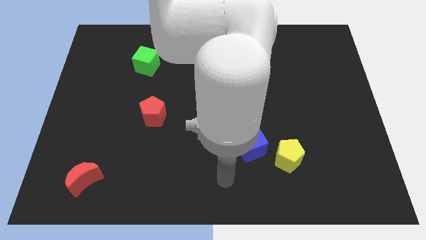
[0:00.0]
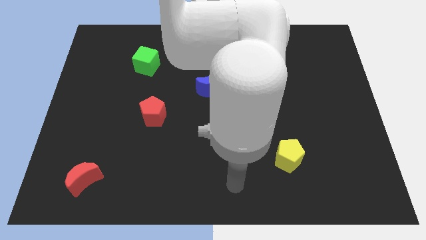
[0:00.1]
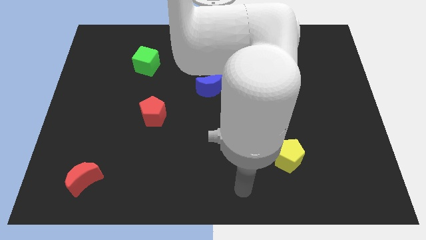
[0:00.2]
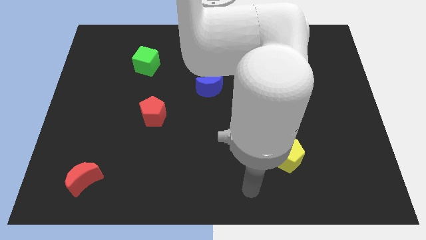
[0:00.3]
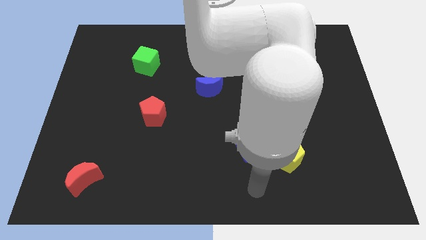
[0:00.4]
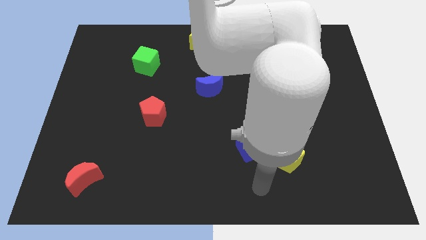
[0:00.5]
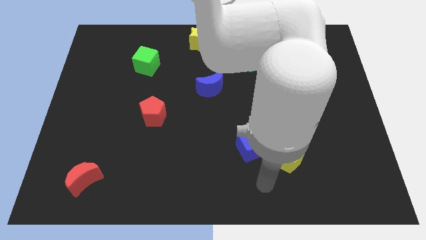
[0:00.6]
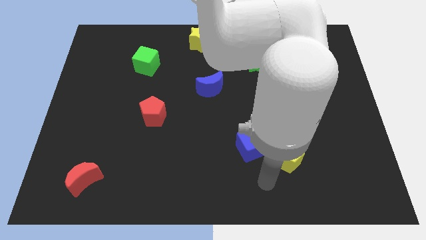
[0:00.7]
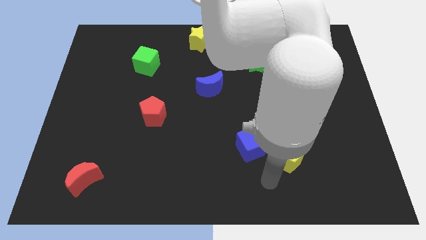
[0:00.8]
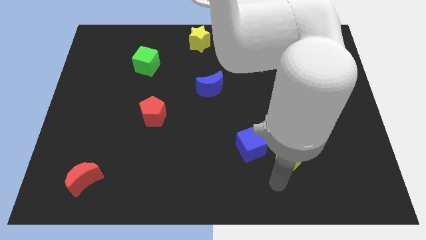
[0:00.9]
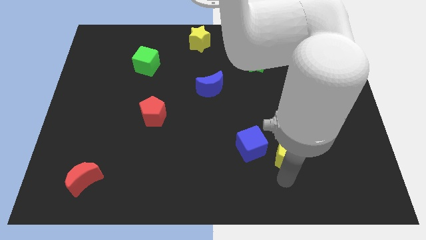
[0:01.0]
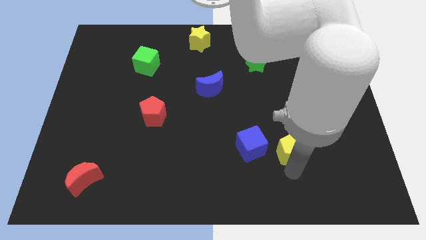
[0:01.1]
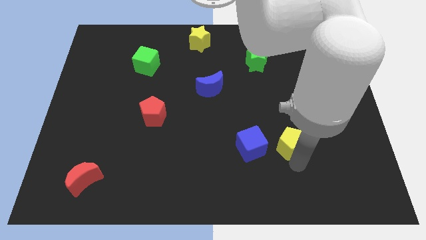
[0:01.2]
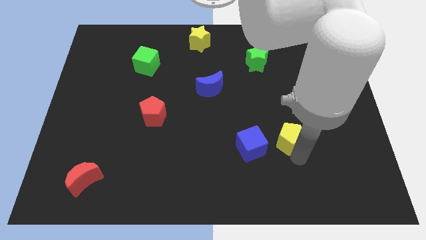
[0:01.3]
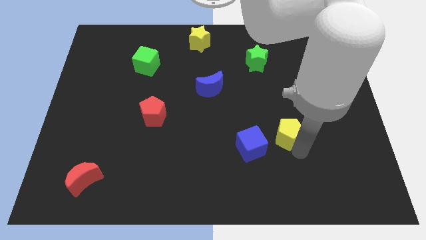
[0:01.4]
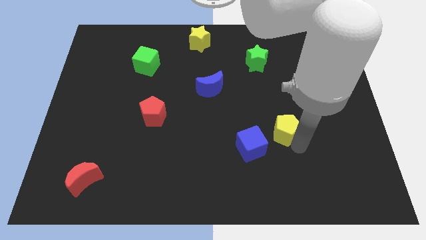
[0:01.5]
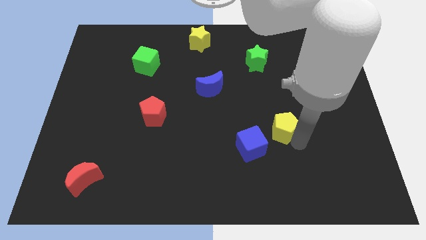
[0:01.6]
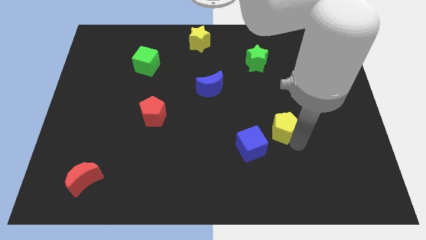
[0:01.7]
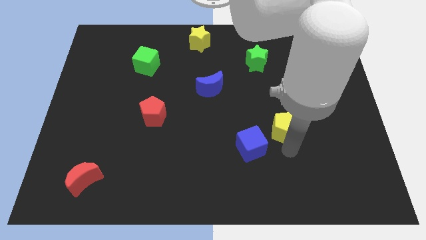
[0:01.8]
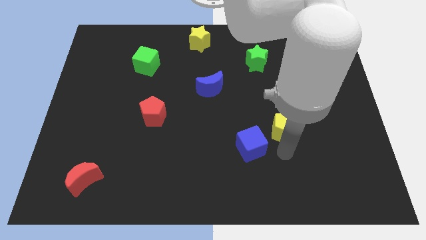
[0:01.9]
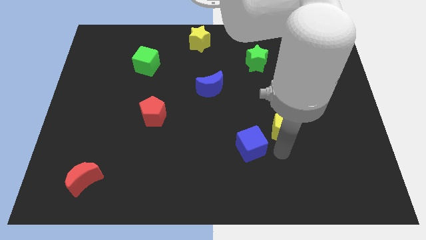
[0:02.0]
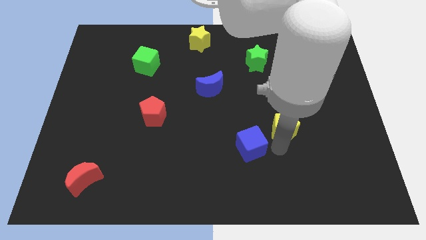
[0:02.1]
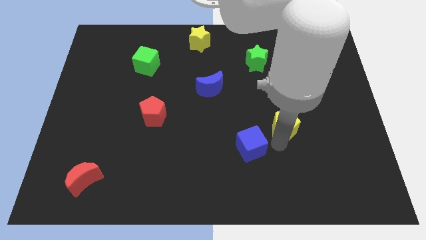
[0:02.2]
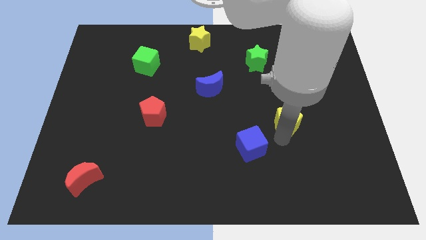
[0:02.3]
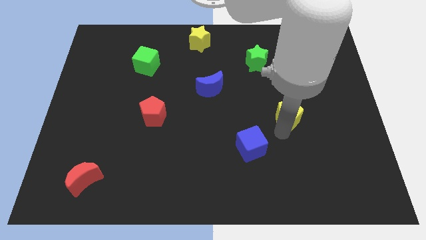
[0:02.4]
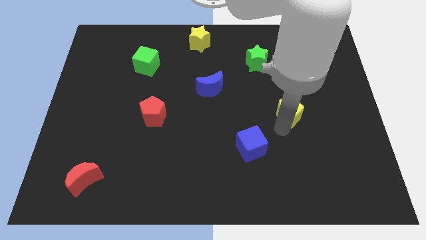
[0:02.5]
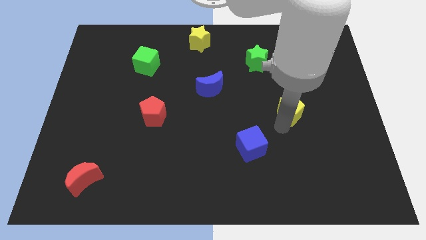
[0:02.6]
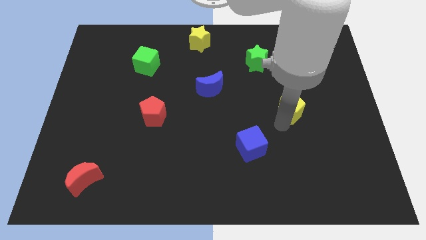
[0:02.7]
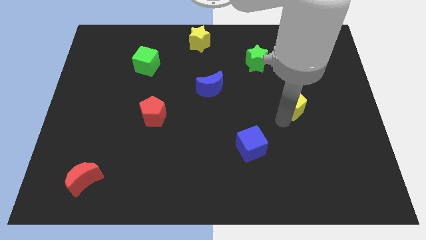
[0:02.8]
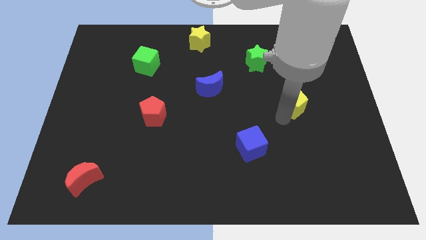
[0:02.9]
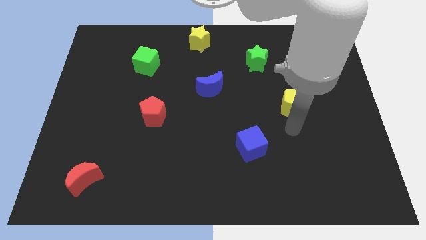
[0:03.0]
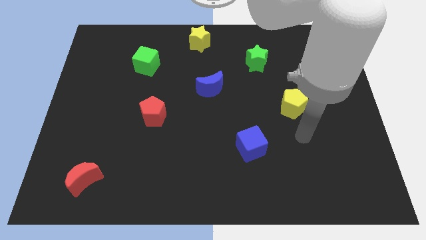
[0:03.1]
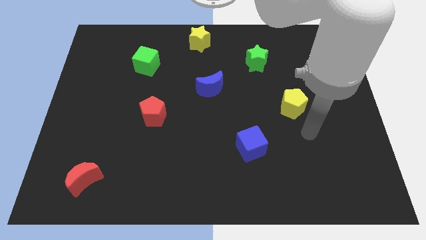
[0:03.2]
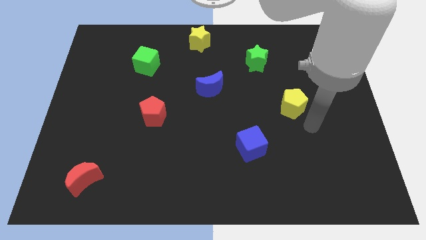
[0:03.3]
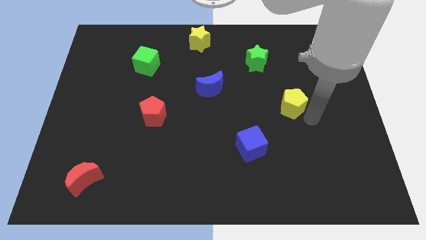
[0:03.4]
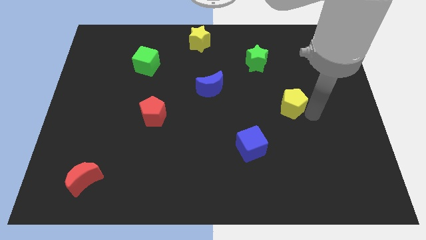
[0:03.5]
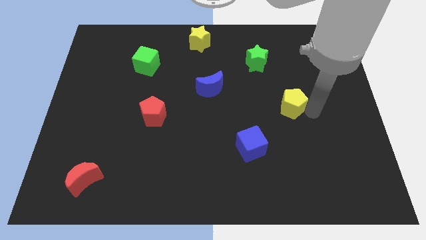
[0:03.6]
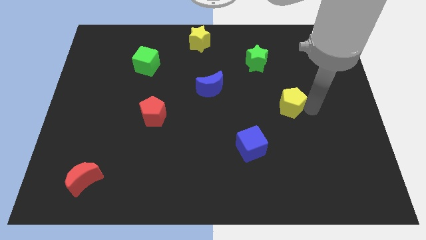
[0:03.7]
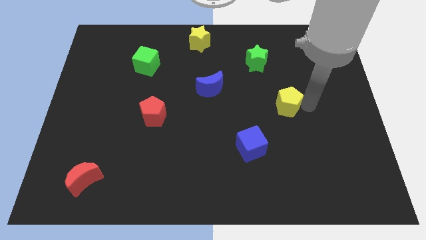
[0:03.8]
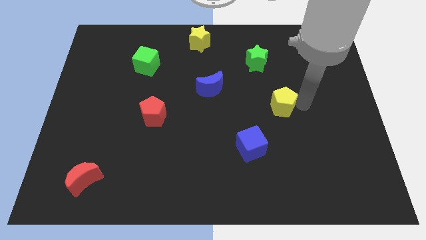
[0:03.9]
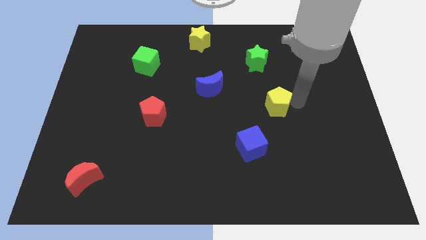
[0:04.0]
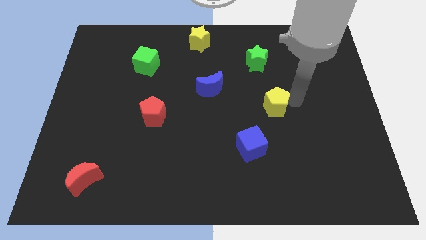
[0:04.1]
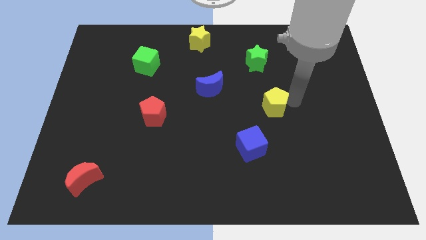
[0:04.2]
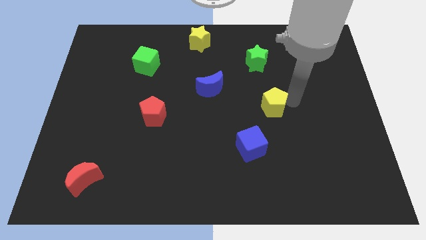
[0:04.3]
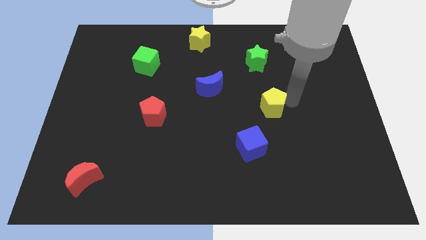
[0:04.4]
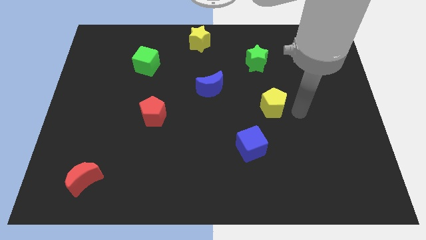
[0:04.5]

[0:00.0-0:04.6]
place the yellow pentagon at the top right side of blue cube

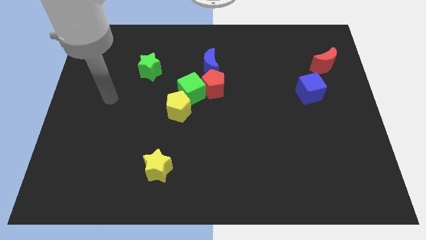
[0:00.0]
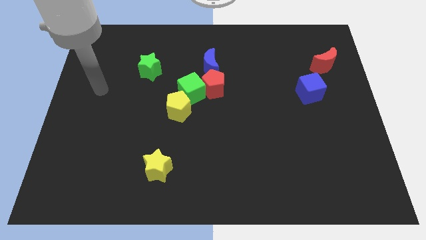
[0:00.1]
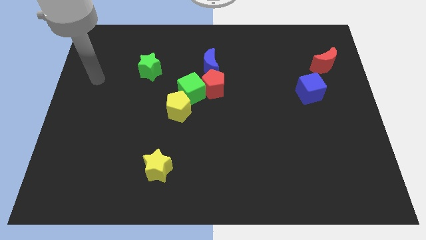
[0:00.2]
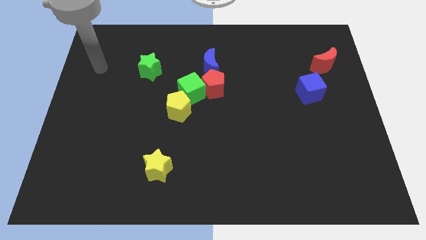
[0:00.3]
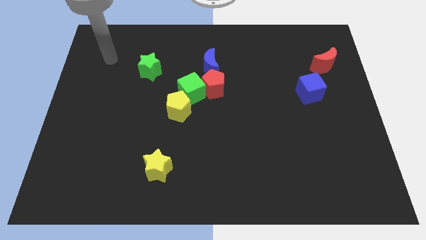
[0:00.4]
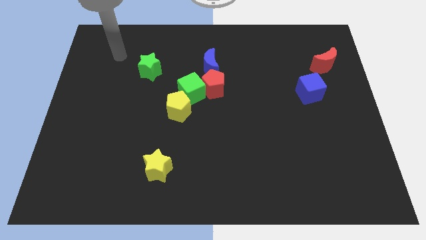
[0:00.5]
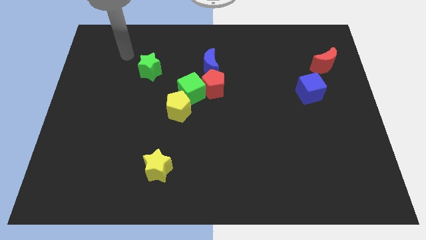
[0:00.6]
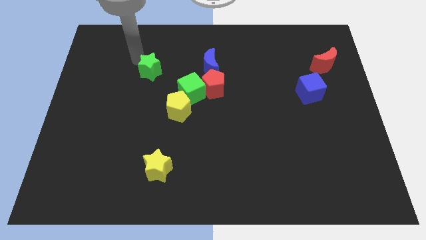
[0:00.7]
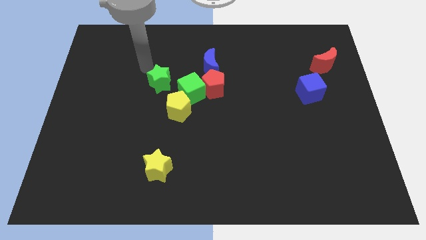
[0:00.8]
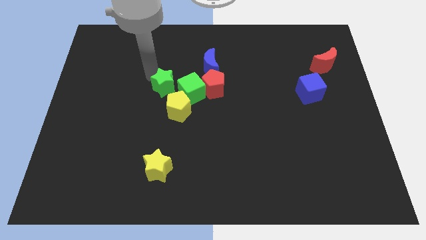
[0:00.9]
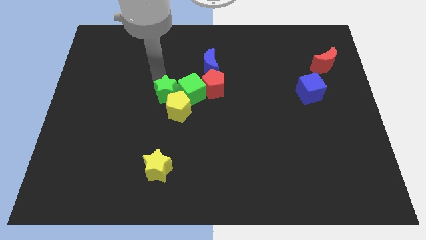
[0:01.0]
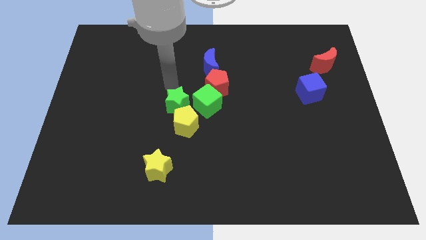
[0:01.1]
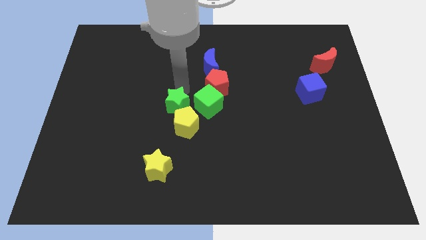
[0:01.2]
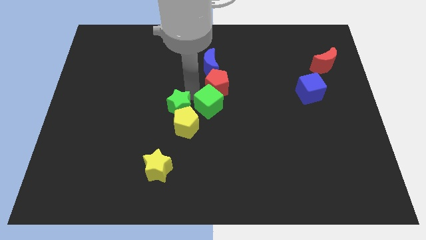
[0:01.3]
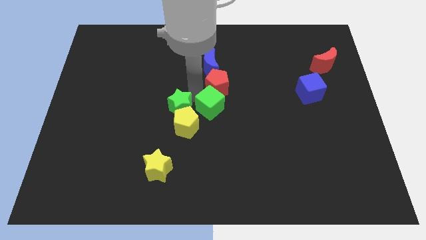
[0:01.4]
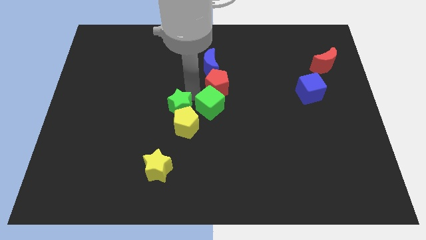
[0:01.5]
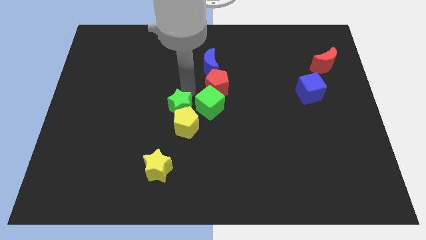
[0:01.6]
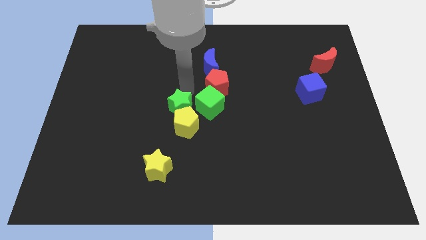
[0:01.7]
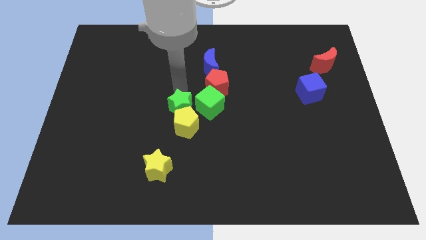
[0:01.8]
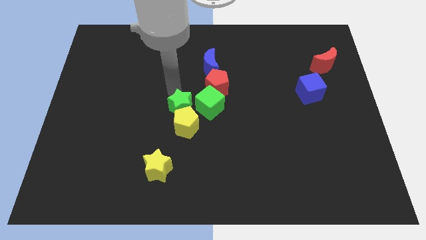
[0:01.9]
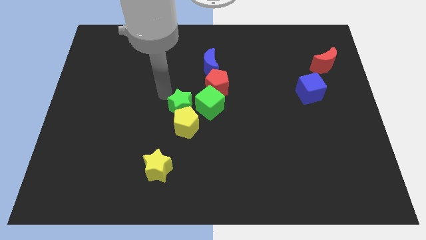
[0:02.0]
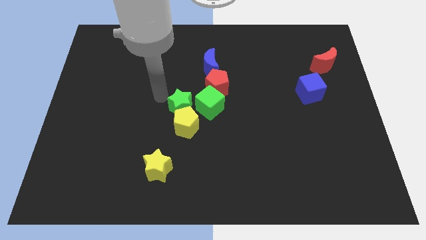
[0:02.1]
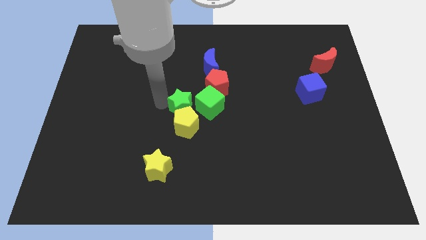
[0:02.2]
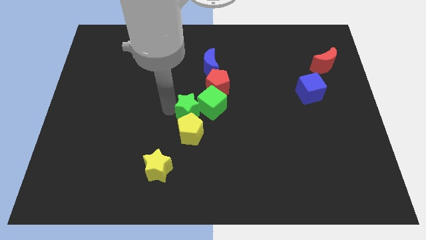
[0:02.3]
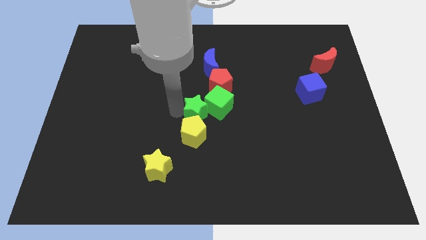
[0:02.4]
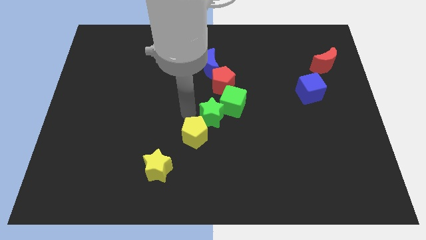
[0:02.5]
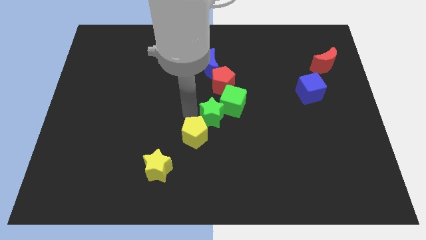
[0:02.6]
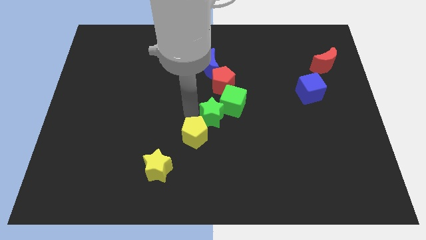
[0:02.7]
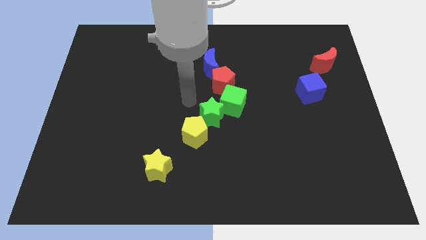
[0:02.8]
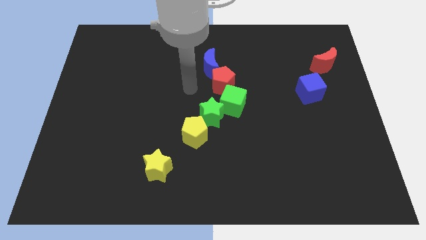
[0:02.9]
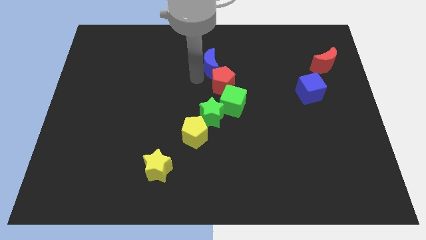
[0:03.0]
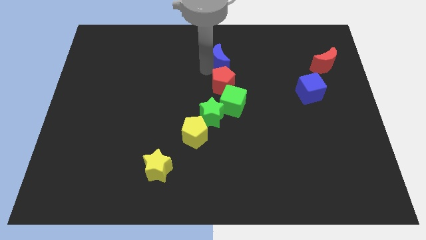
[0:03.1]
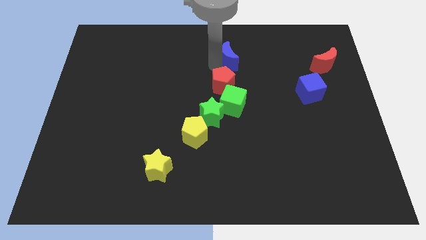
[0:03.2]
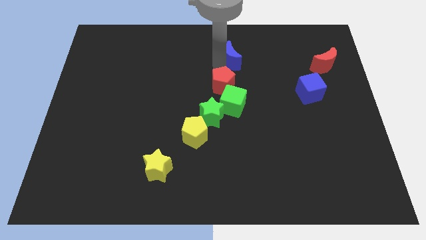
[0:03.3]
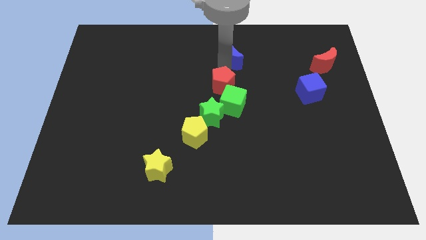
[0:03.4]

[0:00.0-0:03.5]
push the group of blocks to the center

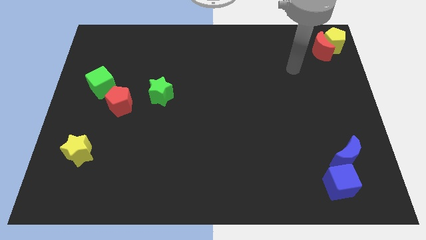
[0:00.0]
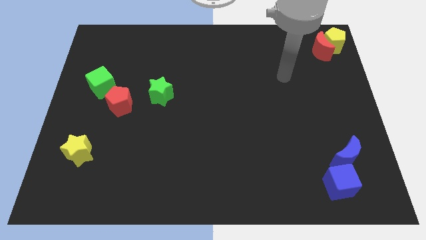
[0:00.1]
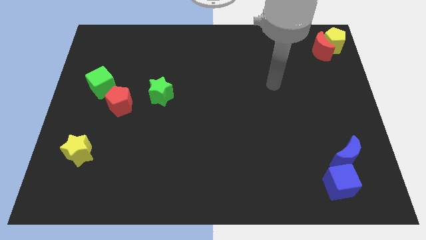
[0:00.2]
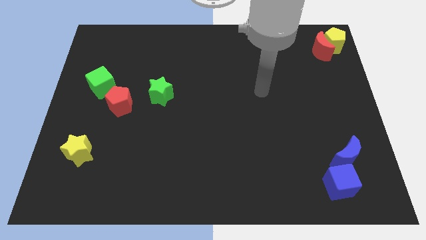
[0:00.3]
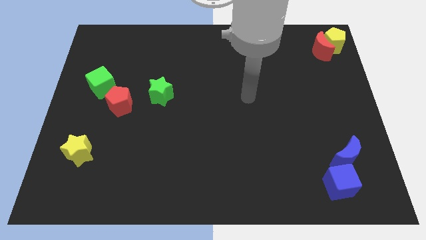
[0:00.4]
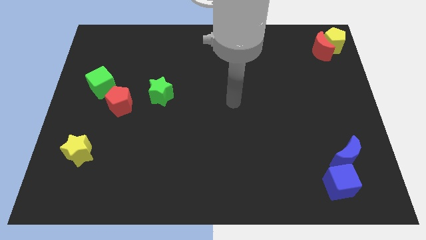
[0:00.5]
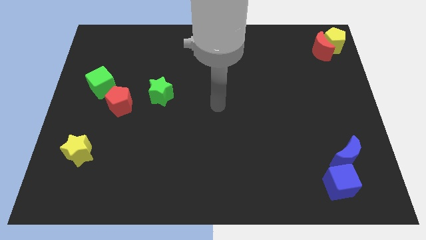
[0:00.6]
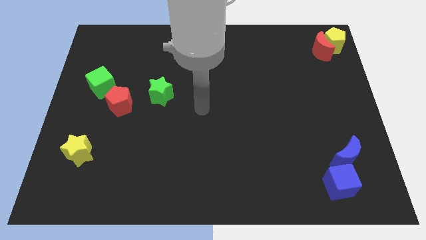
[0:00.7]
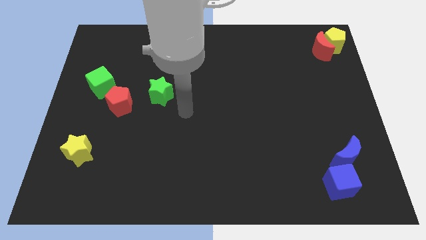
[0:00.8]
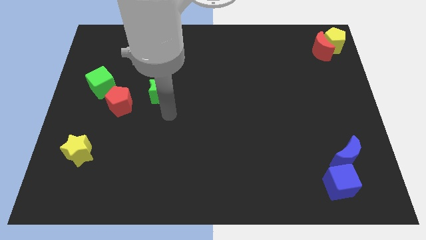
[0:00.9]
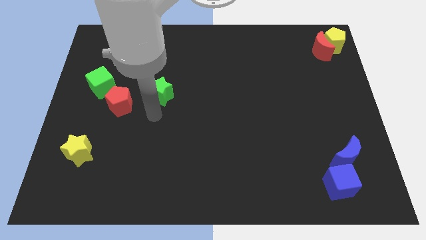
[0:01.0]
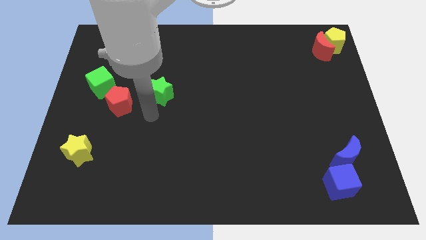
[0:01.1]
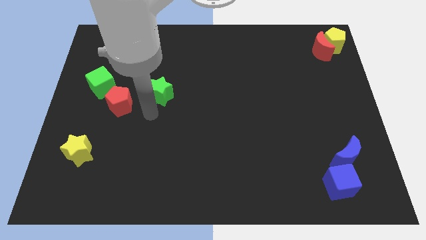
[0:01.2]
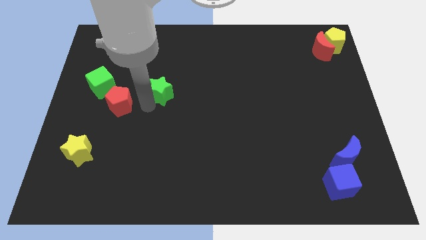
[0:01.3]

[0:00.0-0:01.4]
tap the green star
